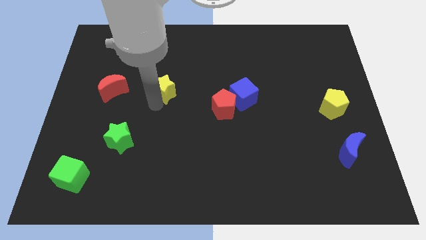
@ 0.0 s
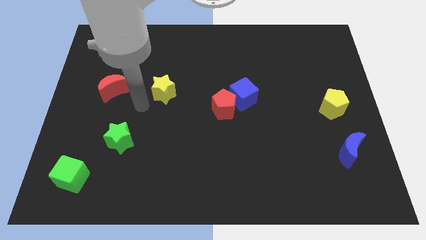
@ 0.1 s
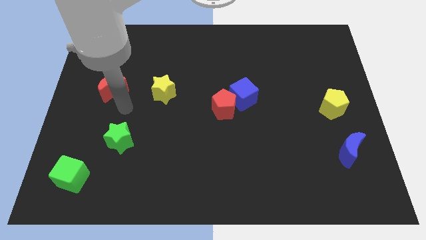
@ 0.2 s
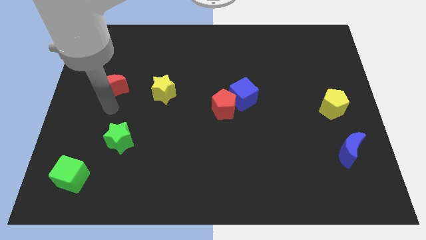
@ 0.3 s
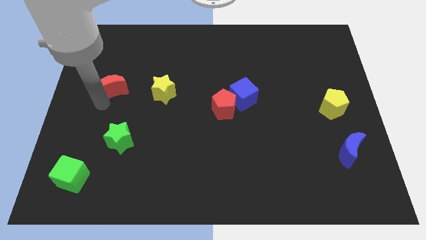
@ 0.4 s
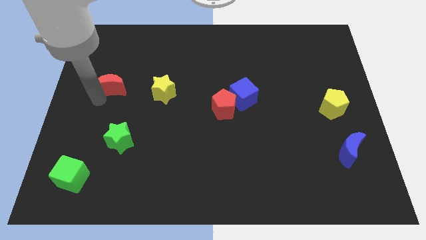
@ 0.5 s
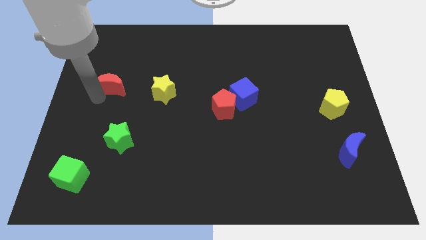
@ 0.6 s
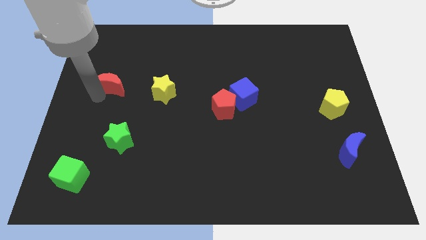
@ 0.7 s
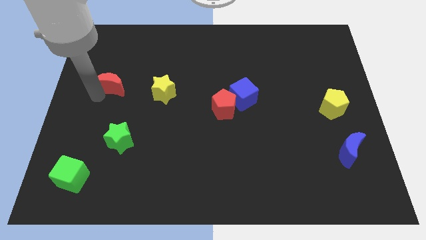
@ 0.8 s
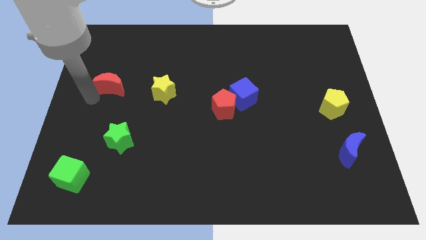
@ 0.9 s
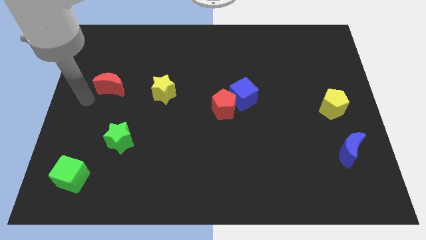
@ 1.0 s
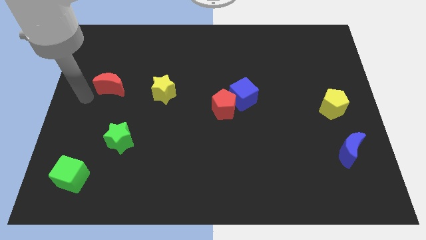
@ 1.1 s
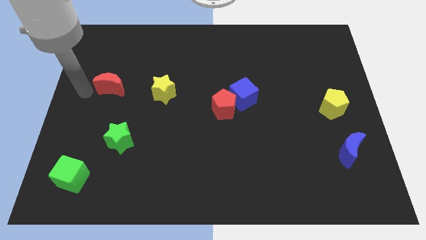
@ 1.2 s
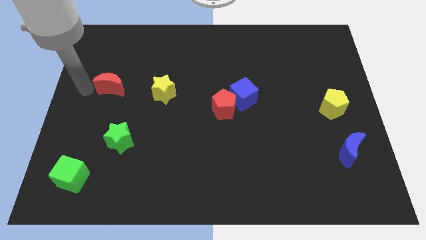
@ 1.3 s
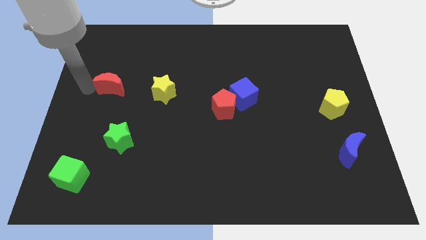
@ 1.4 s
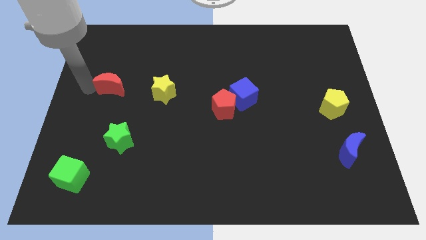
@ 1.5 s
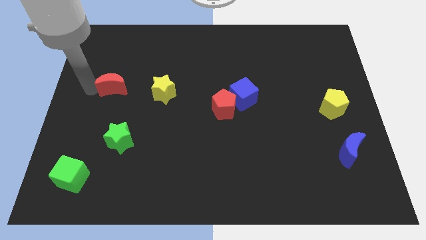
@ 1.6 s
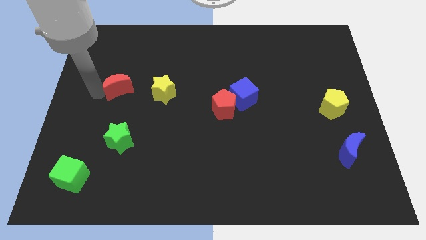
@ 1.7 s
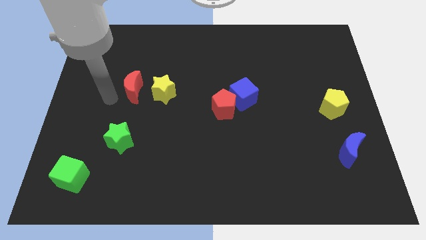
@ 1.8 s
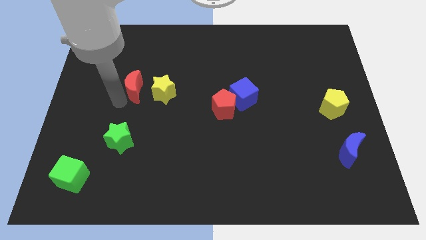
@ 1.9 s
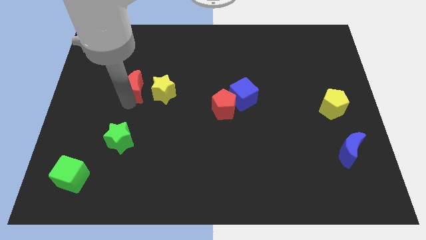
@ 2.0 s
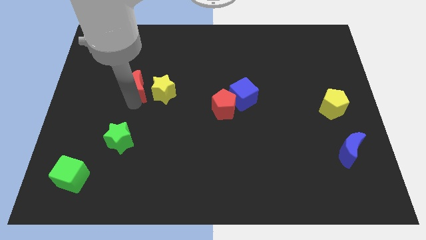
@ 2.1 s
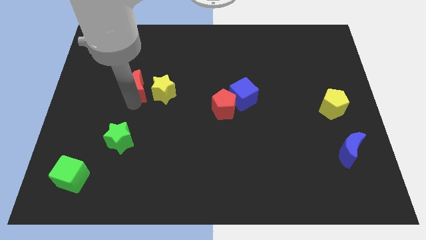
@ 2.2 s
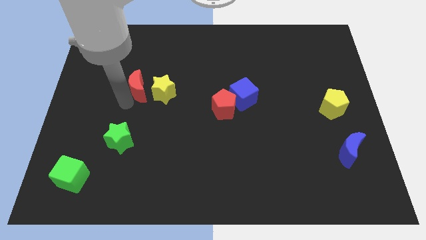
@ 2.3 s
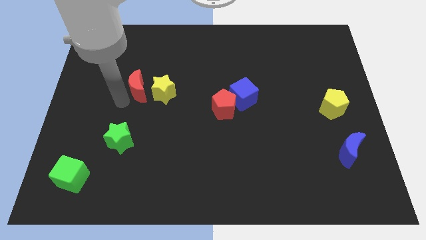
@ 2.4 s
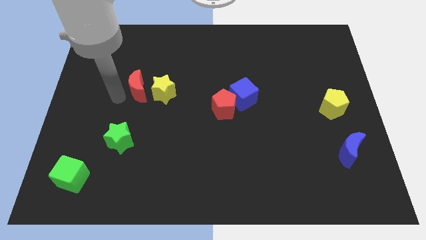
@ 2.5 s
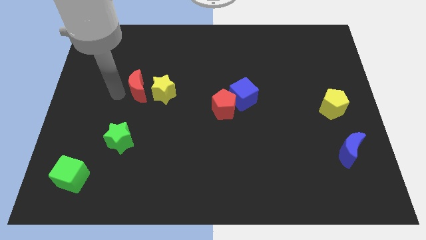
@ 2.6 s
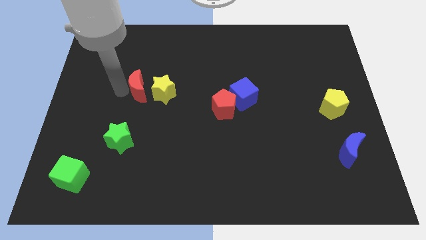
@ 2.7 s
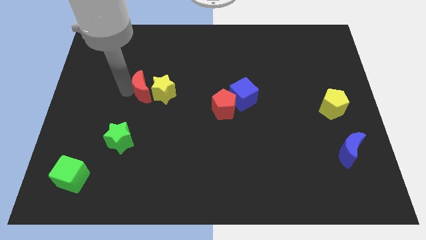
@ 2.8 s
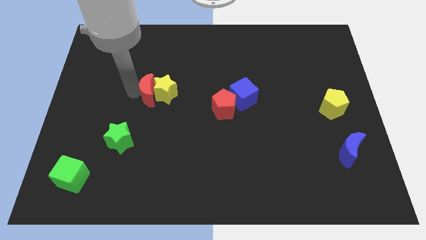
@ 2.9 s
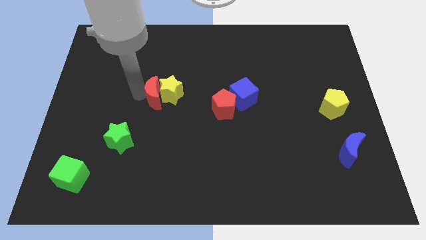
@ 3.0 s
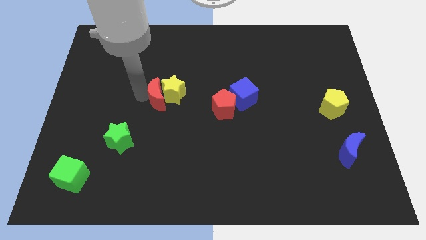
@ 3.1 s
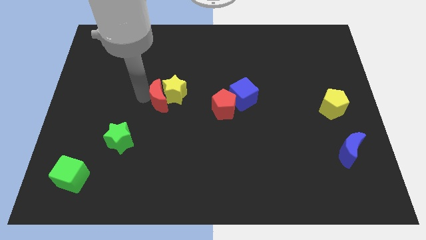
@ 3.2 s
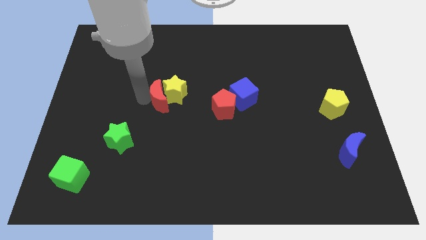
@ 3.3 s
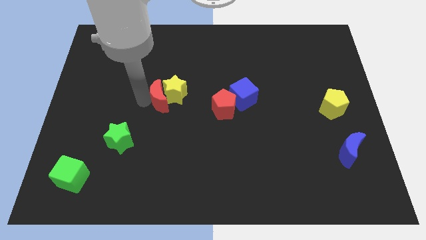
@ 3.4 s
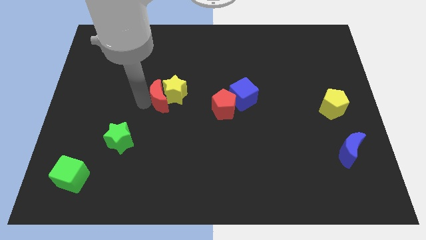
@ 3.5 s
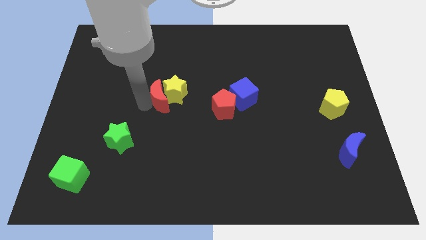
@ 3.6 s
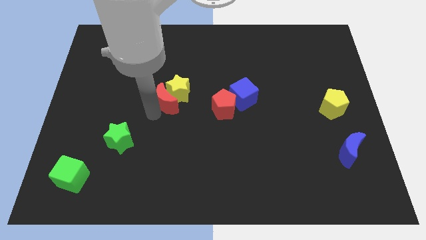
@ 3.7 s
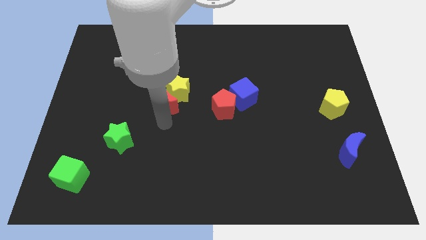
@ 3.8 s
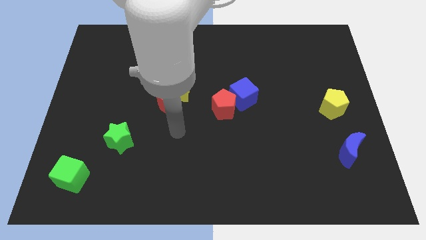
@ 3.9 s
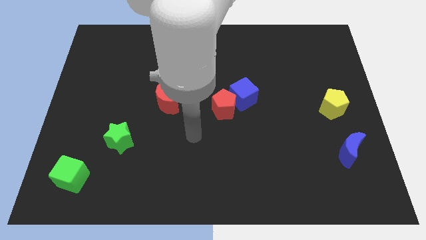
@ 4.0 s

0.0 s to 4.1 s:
push the red crescent into the yellow star

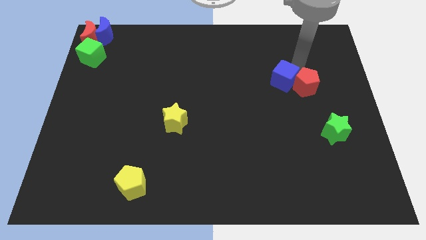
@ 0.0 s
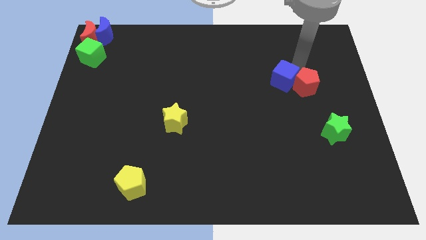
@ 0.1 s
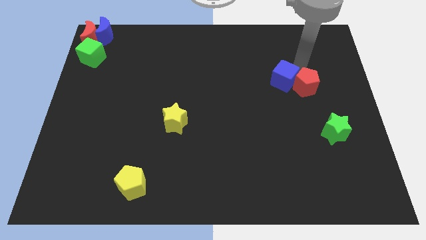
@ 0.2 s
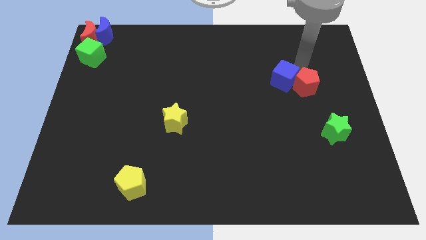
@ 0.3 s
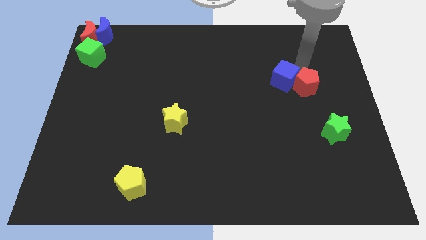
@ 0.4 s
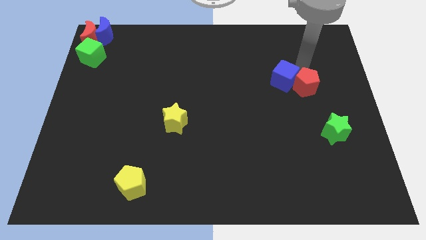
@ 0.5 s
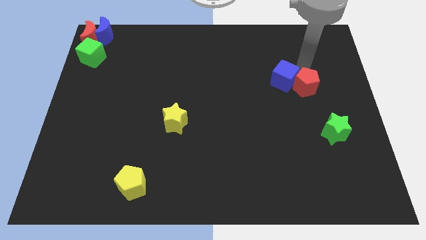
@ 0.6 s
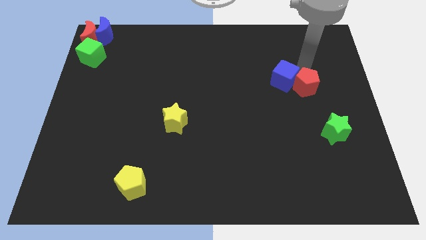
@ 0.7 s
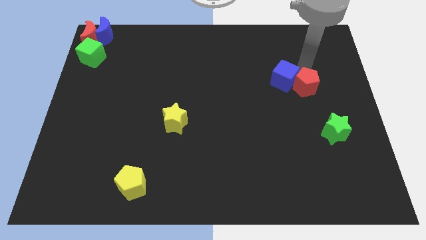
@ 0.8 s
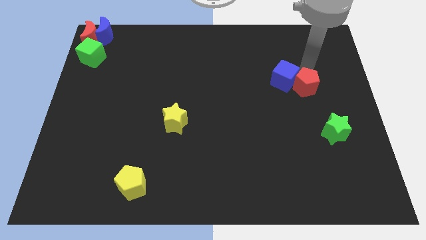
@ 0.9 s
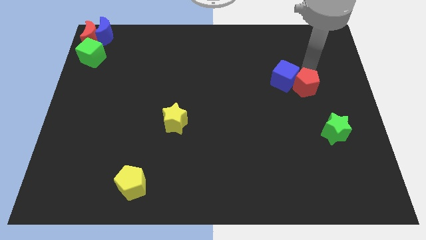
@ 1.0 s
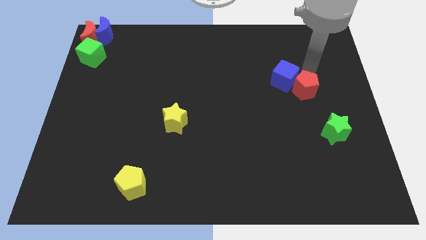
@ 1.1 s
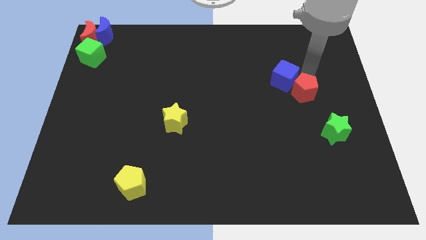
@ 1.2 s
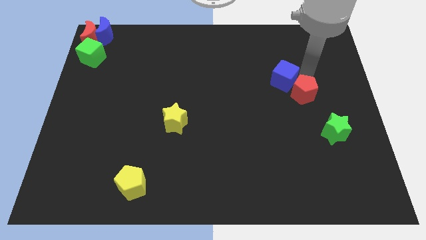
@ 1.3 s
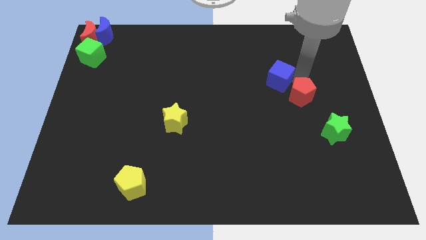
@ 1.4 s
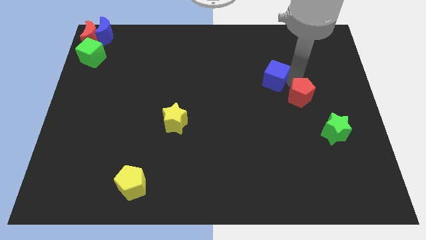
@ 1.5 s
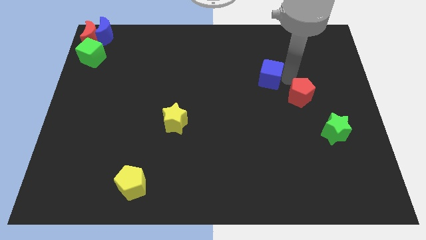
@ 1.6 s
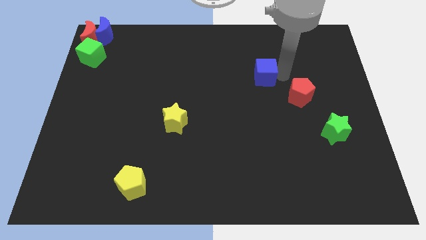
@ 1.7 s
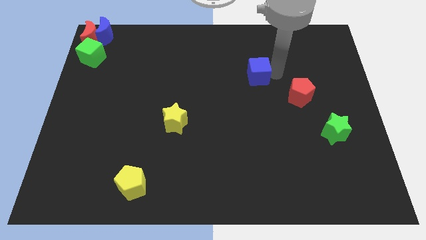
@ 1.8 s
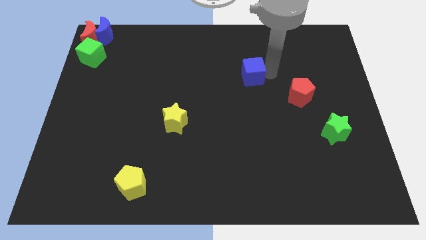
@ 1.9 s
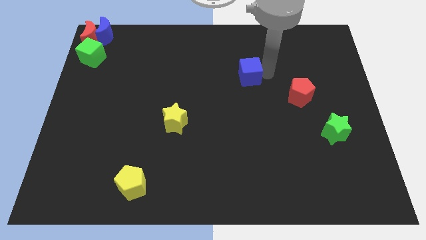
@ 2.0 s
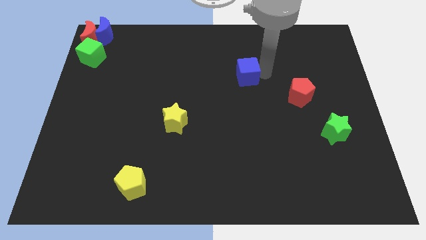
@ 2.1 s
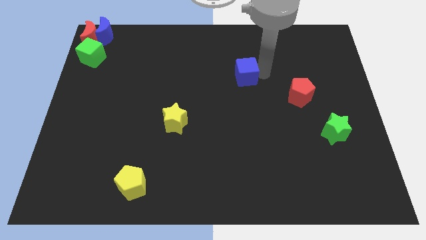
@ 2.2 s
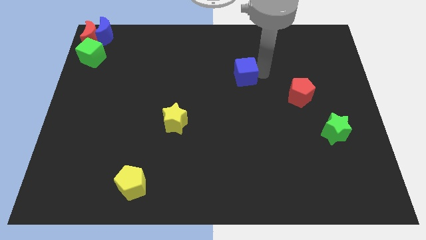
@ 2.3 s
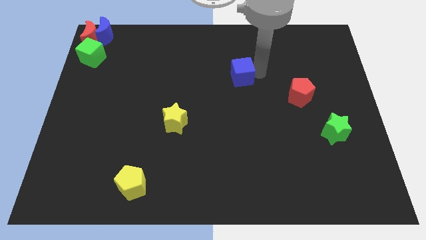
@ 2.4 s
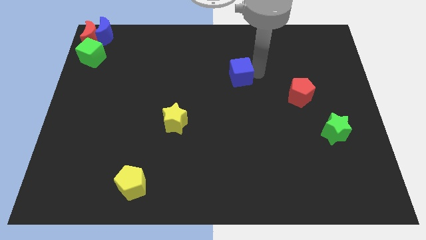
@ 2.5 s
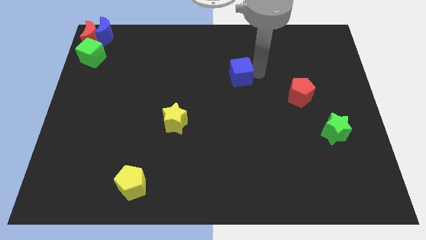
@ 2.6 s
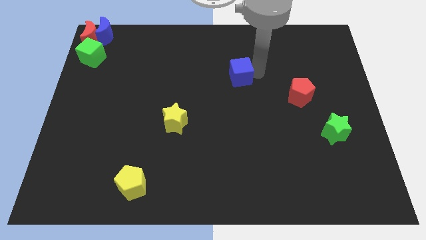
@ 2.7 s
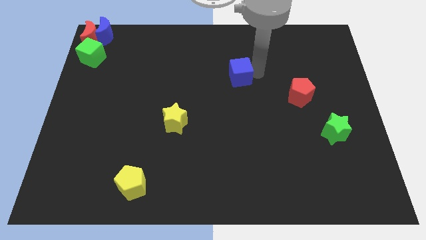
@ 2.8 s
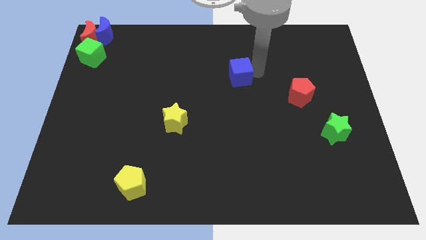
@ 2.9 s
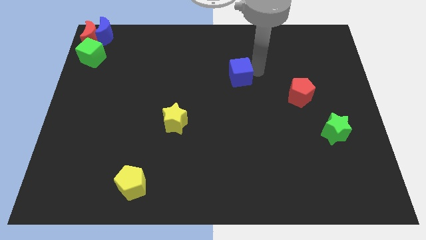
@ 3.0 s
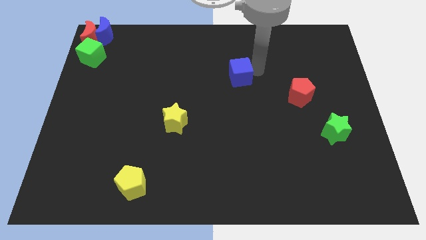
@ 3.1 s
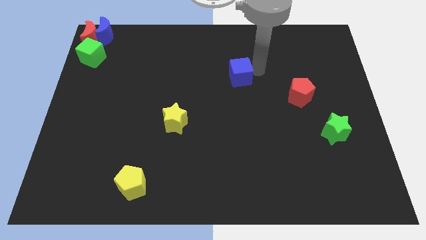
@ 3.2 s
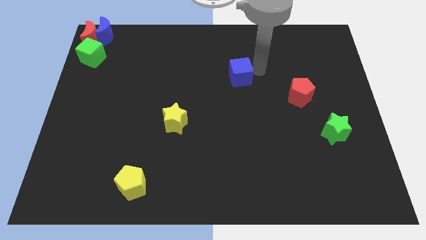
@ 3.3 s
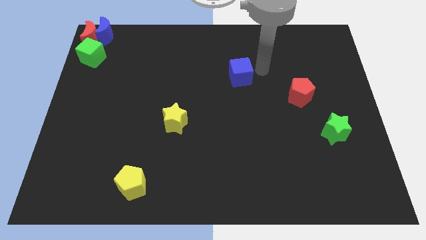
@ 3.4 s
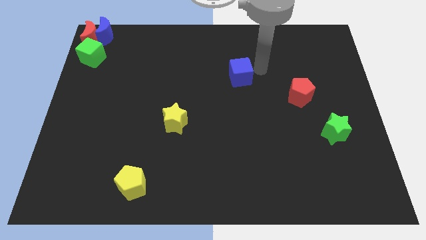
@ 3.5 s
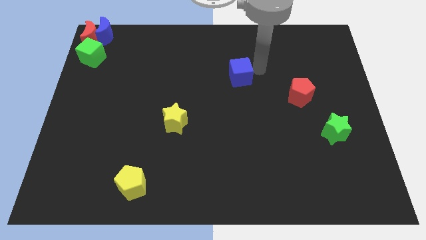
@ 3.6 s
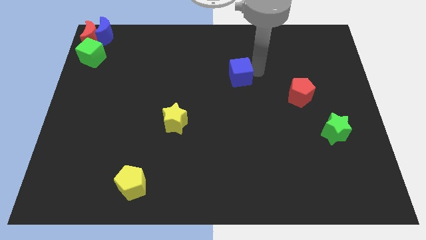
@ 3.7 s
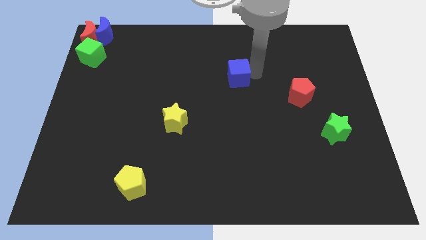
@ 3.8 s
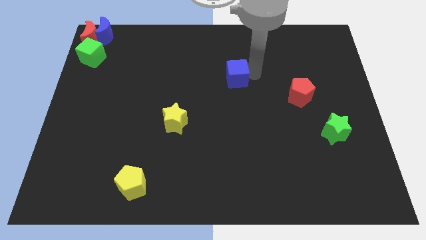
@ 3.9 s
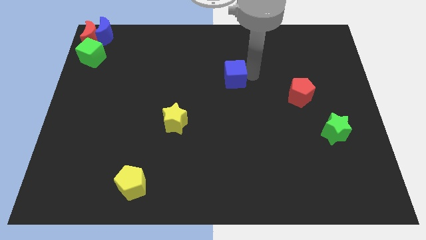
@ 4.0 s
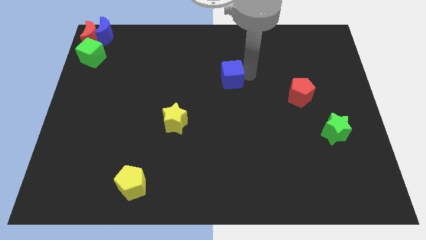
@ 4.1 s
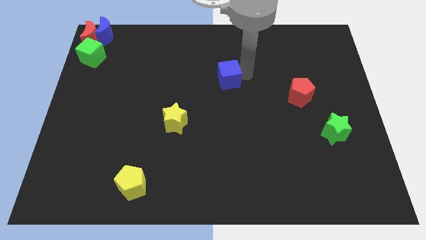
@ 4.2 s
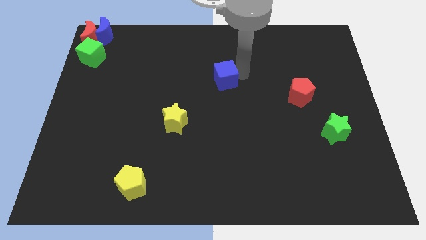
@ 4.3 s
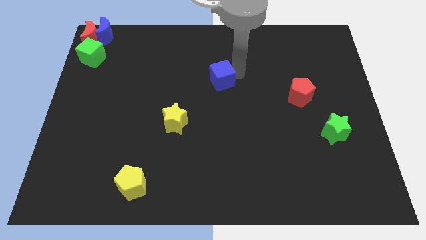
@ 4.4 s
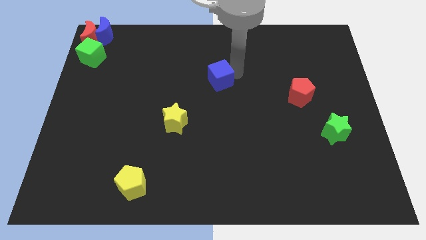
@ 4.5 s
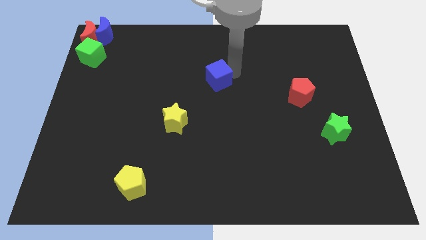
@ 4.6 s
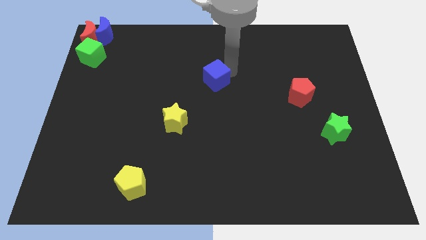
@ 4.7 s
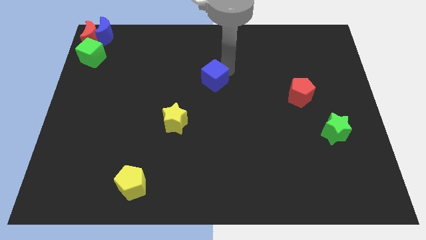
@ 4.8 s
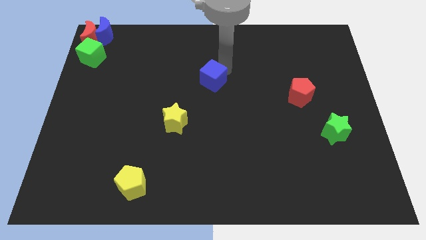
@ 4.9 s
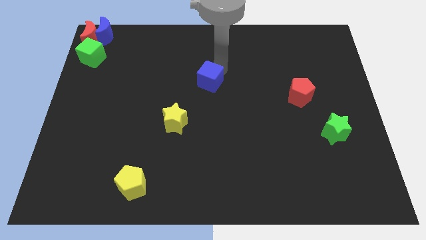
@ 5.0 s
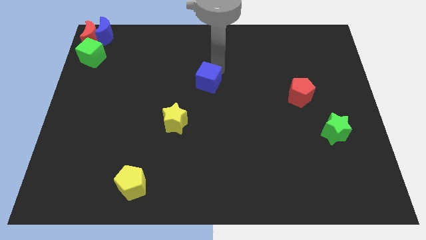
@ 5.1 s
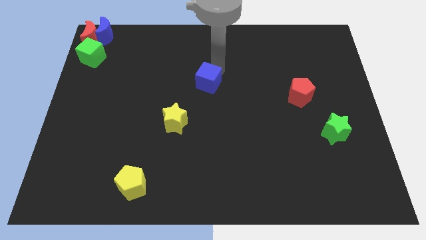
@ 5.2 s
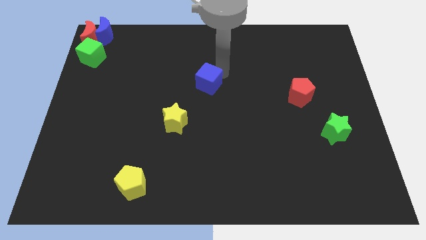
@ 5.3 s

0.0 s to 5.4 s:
separate the blue cube from the red pentagon
